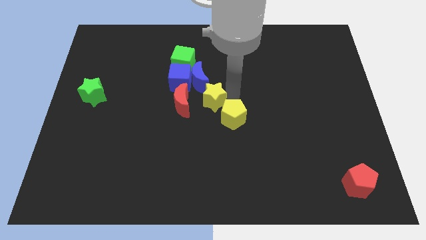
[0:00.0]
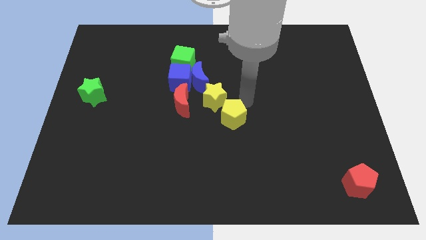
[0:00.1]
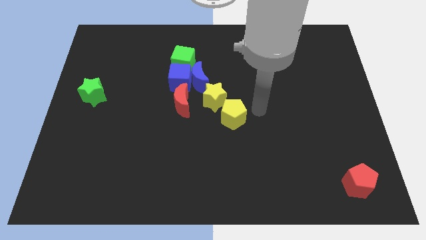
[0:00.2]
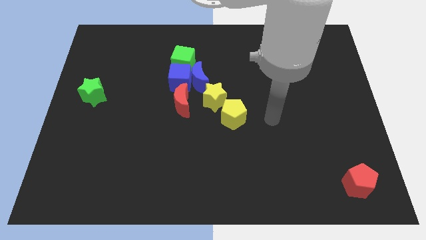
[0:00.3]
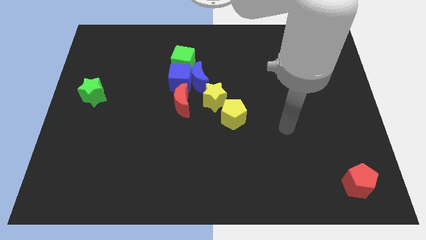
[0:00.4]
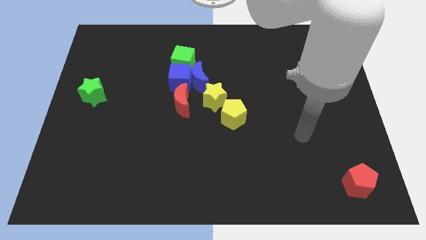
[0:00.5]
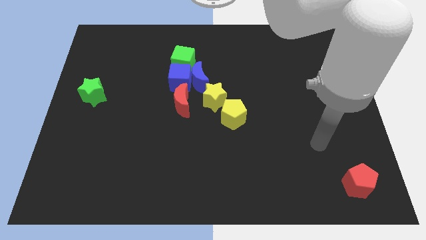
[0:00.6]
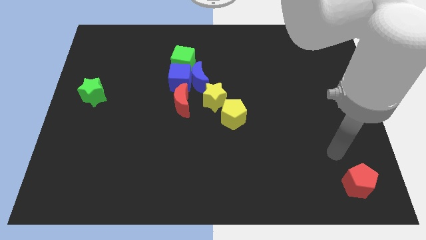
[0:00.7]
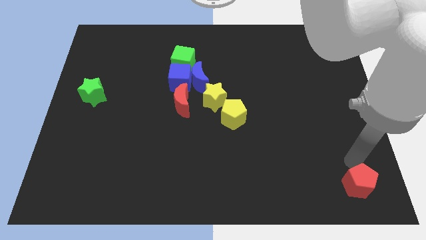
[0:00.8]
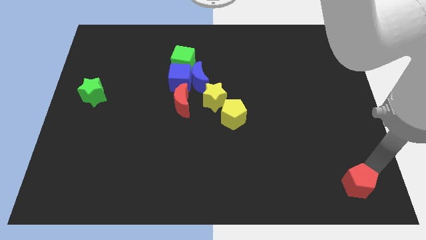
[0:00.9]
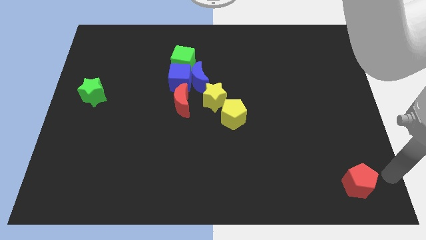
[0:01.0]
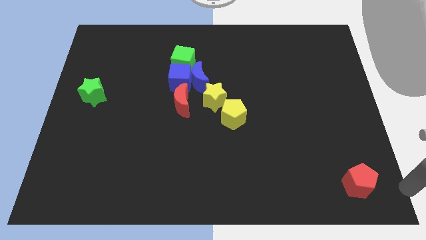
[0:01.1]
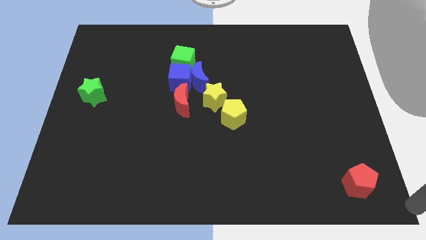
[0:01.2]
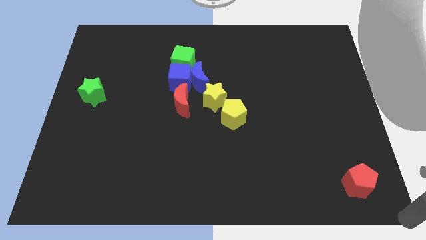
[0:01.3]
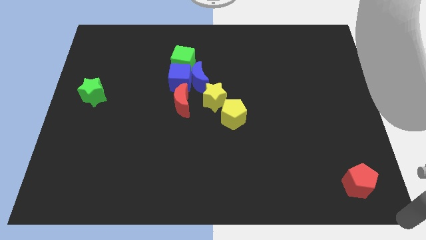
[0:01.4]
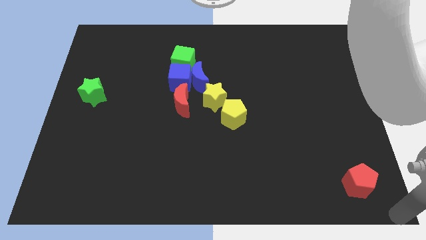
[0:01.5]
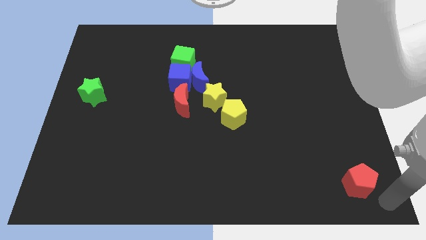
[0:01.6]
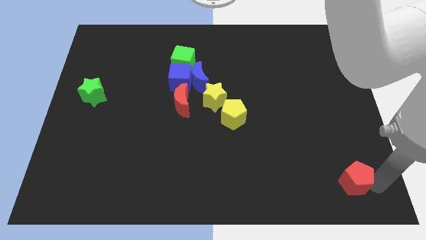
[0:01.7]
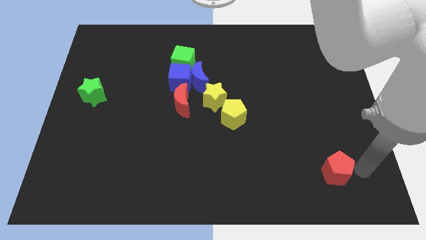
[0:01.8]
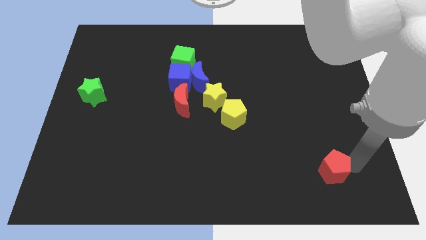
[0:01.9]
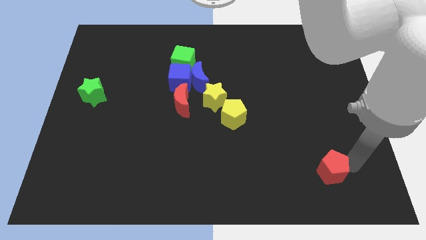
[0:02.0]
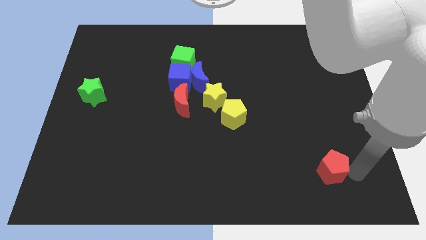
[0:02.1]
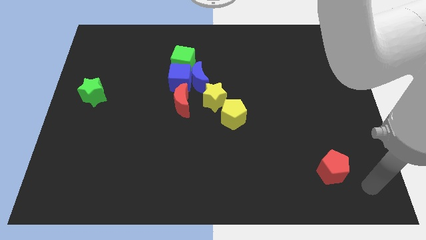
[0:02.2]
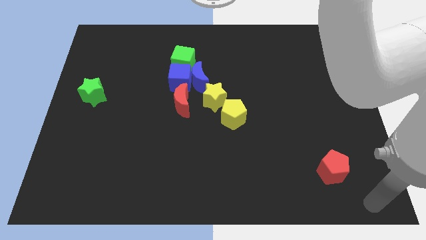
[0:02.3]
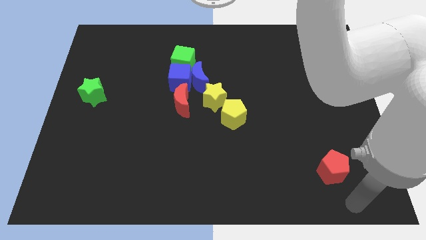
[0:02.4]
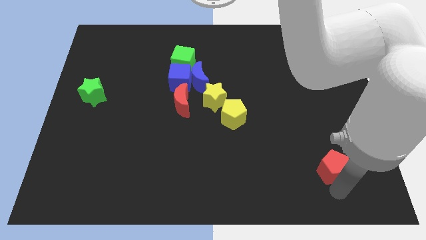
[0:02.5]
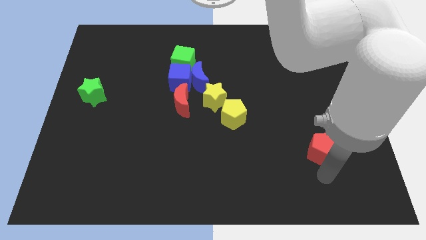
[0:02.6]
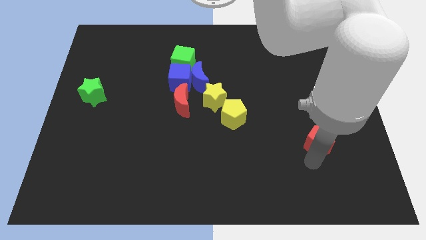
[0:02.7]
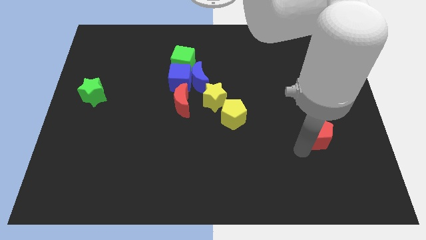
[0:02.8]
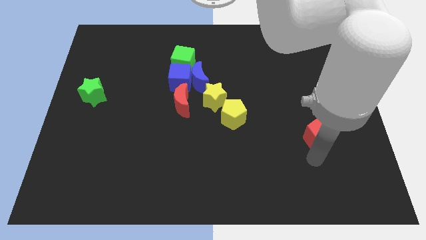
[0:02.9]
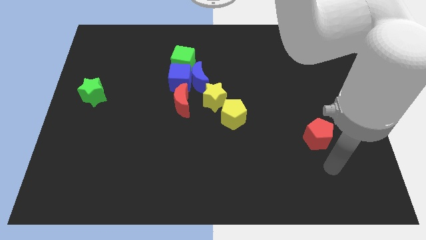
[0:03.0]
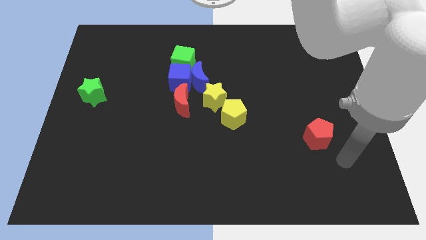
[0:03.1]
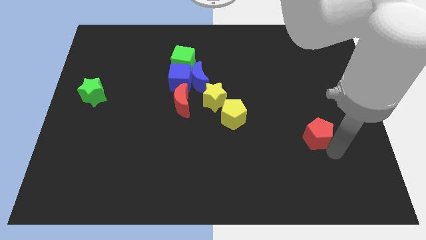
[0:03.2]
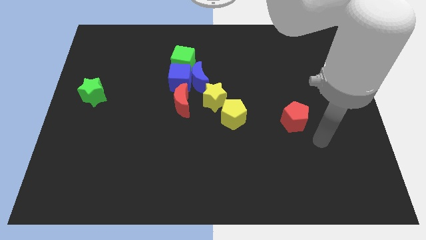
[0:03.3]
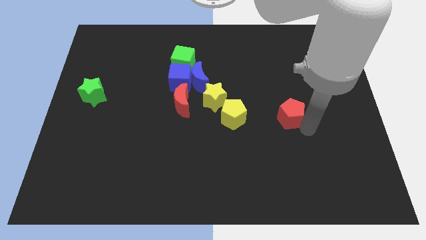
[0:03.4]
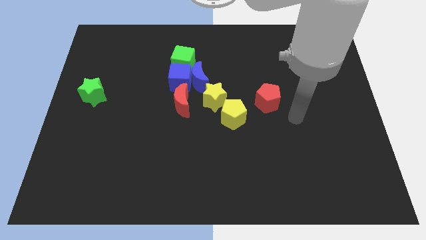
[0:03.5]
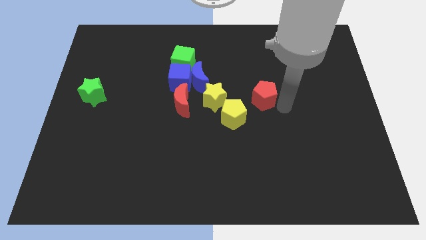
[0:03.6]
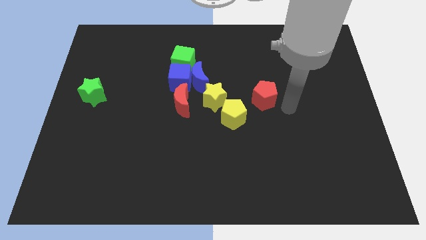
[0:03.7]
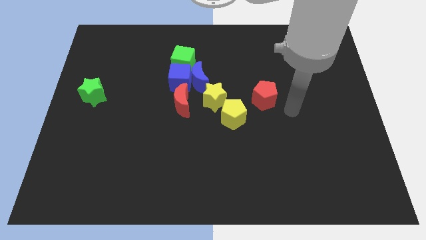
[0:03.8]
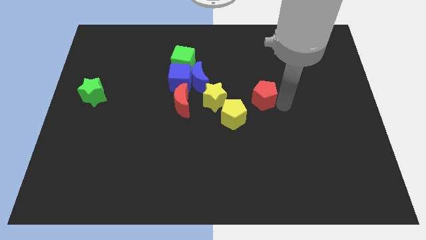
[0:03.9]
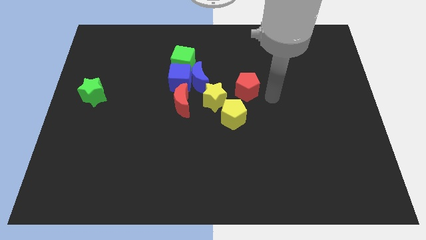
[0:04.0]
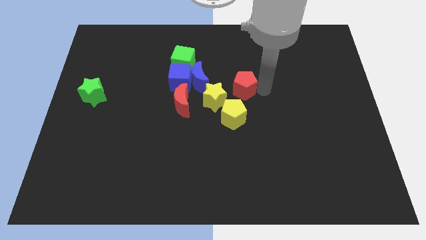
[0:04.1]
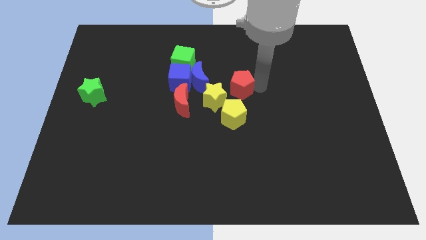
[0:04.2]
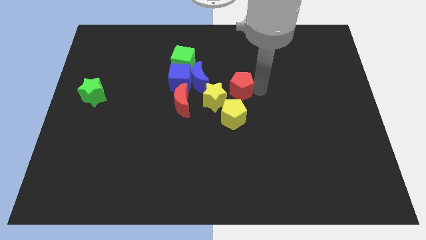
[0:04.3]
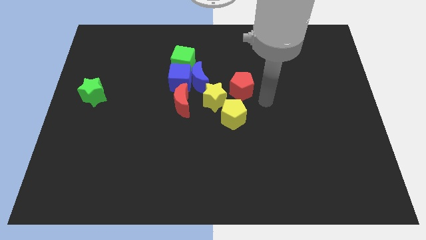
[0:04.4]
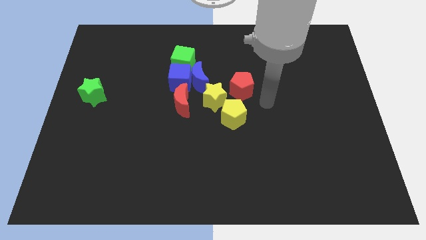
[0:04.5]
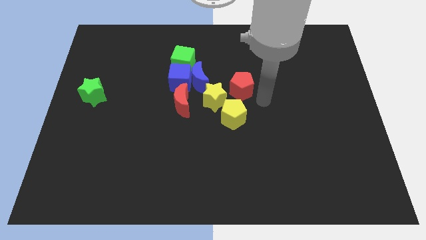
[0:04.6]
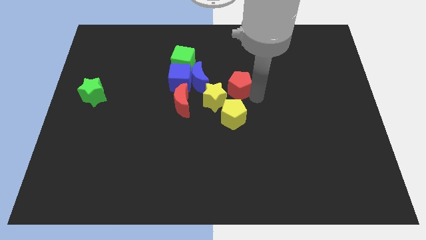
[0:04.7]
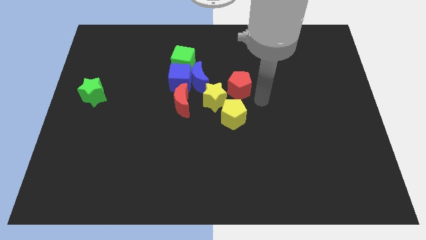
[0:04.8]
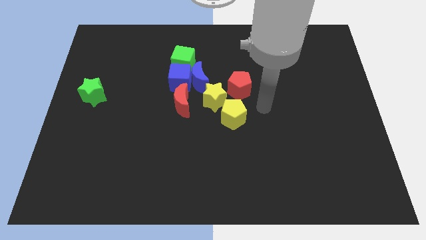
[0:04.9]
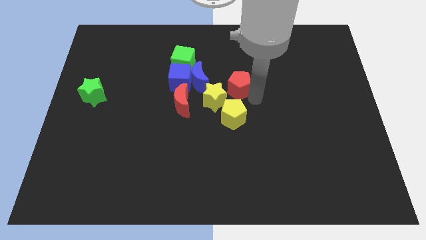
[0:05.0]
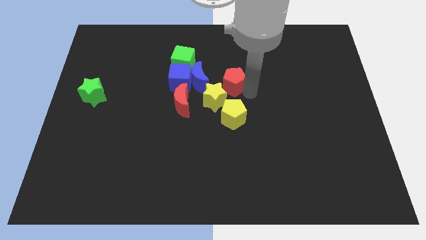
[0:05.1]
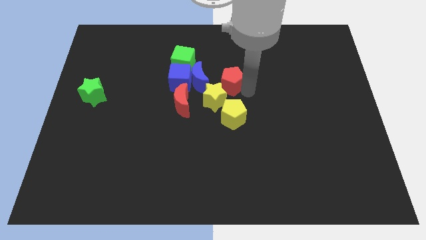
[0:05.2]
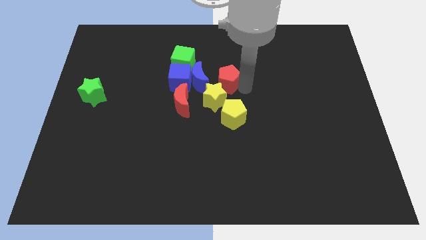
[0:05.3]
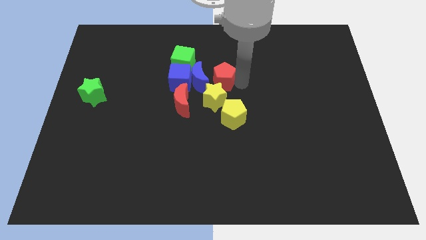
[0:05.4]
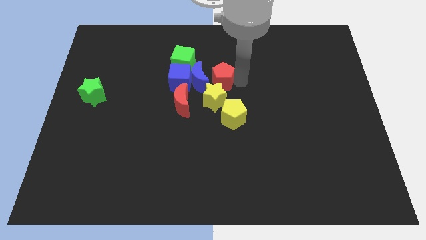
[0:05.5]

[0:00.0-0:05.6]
slide the red pentagon to the right of the blue moon

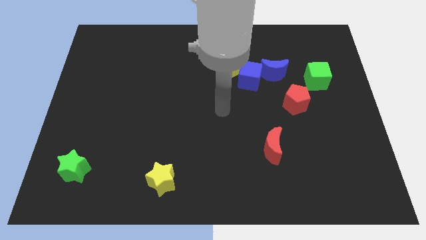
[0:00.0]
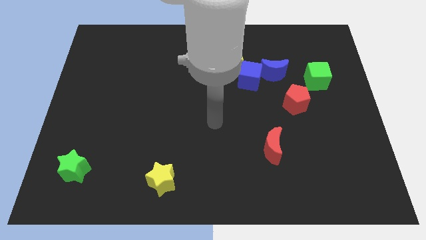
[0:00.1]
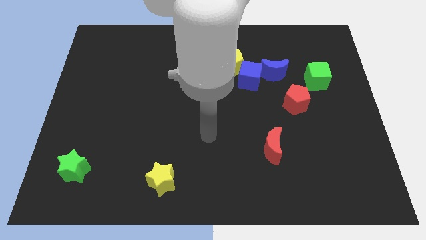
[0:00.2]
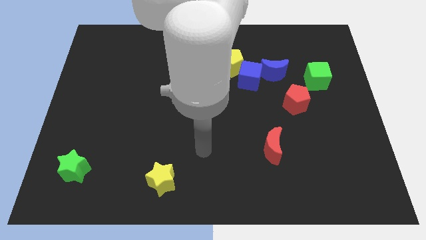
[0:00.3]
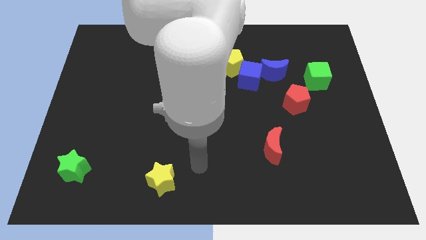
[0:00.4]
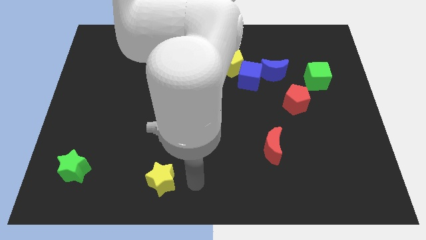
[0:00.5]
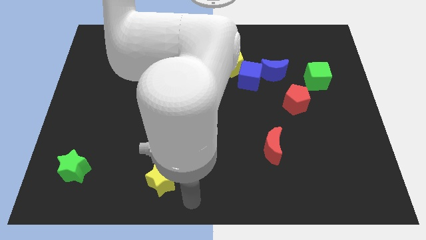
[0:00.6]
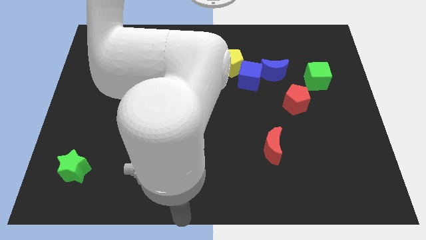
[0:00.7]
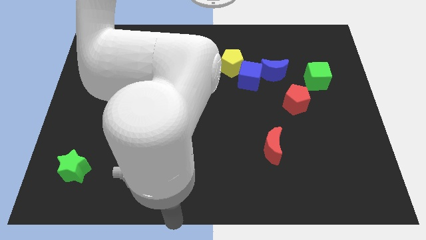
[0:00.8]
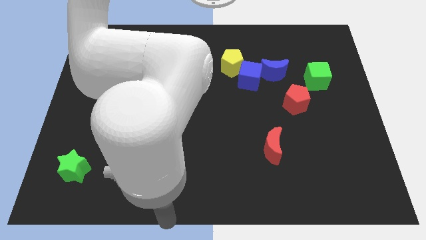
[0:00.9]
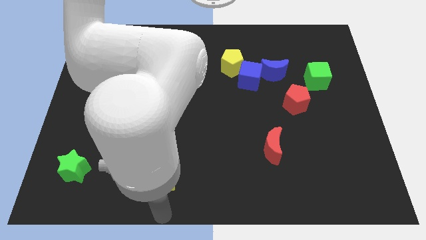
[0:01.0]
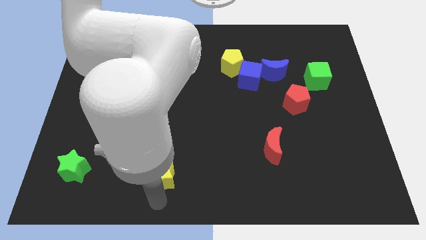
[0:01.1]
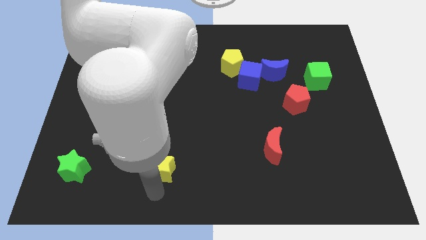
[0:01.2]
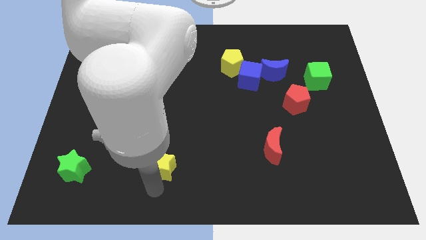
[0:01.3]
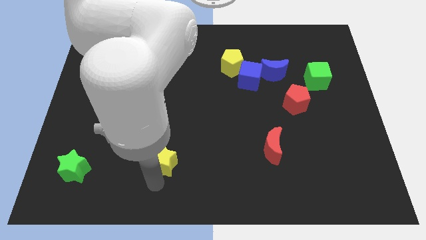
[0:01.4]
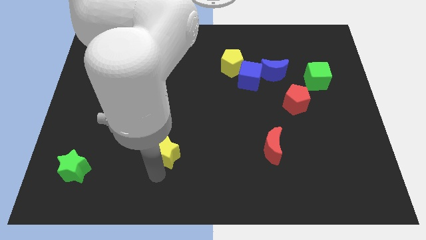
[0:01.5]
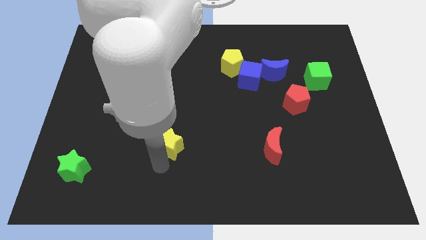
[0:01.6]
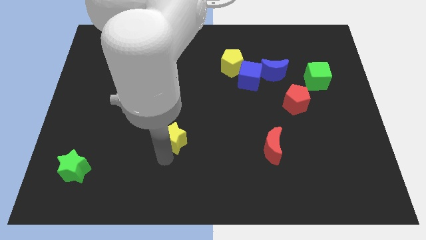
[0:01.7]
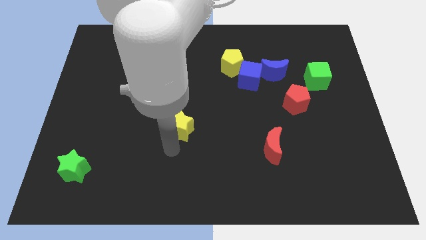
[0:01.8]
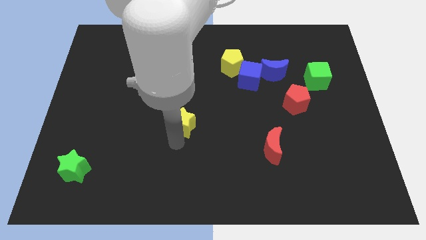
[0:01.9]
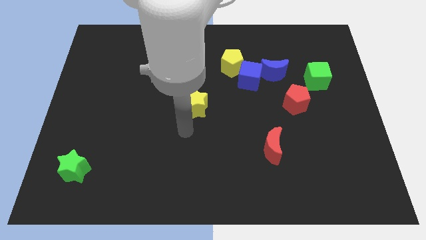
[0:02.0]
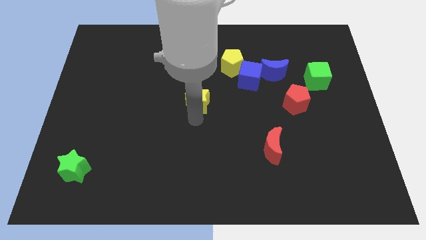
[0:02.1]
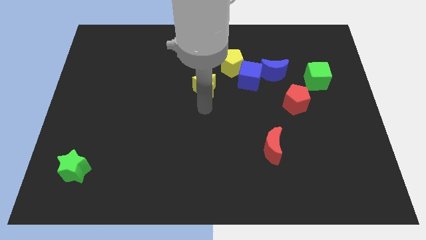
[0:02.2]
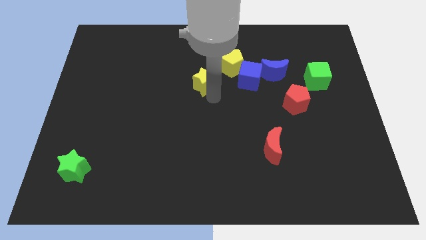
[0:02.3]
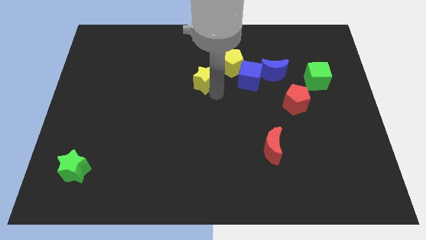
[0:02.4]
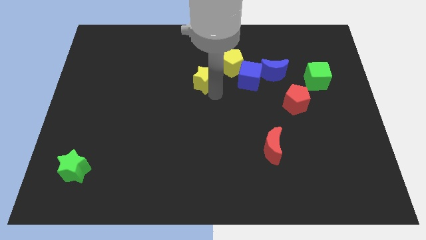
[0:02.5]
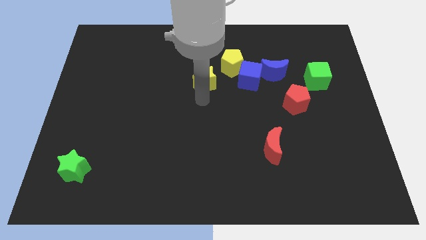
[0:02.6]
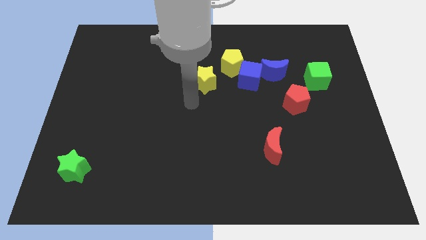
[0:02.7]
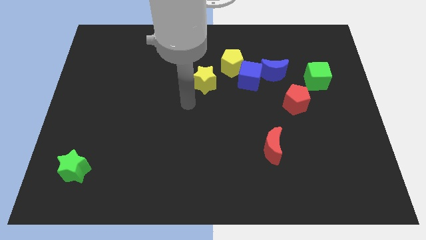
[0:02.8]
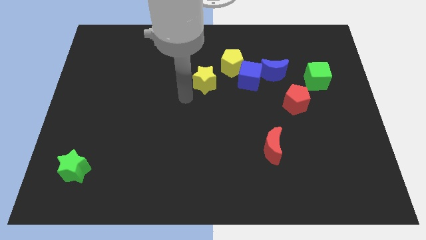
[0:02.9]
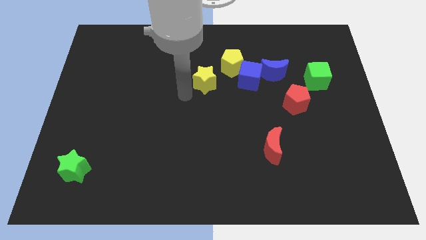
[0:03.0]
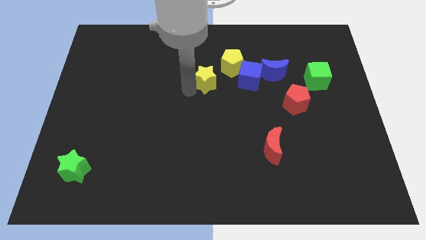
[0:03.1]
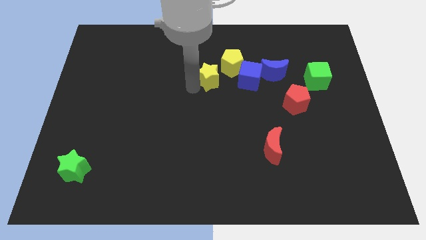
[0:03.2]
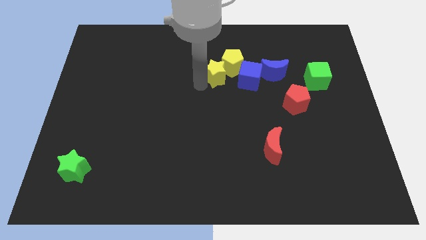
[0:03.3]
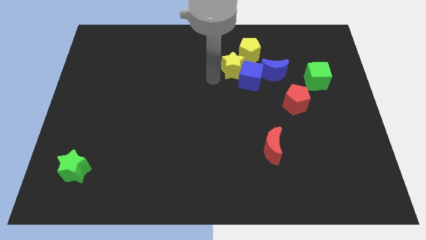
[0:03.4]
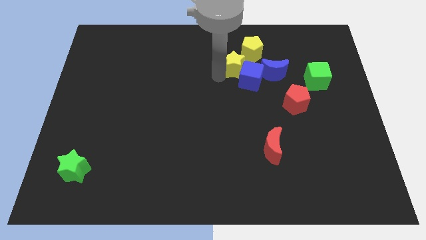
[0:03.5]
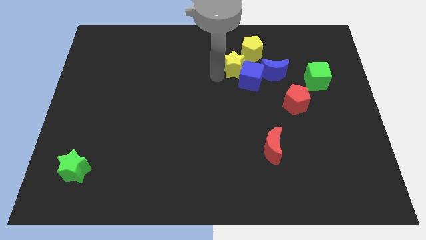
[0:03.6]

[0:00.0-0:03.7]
push the yellow star below the yellow pentagon
